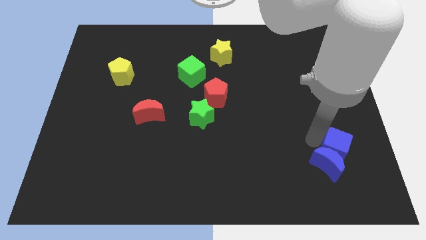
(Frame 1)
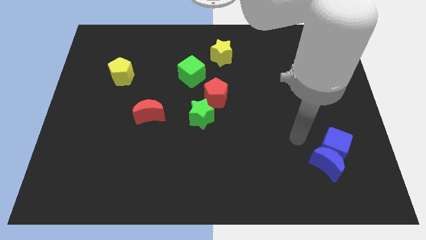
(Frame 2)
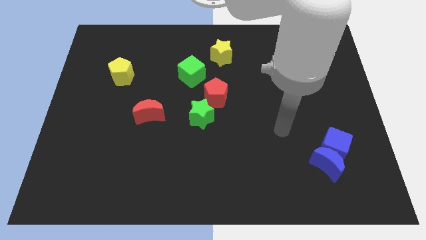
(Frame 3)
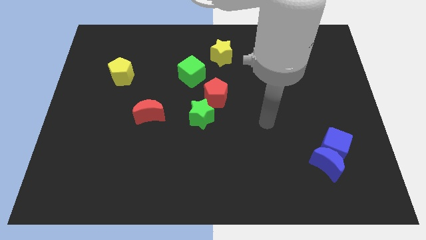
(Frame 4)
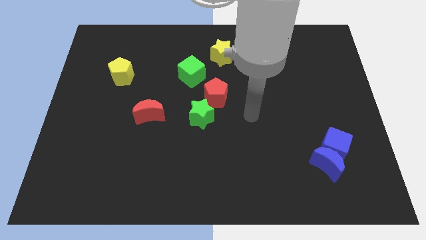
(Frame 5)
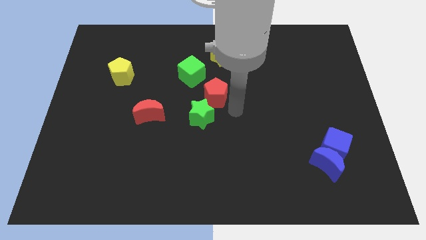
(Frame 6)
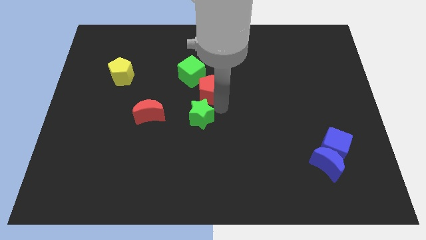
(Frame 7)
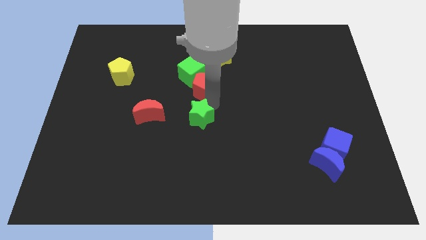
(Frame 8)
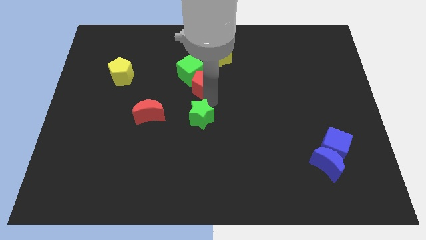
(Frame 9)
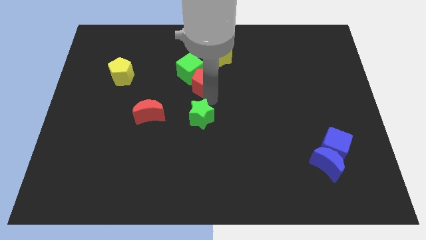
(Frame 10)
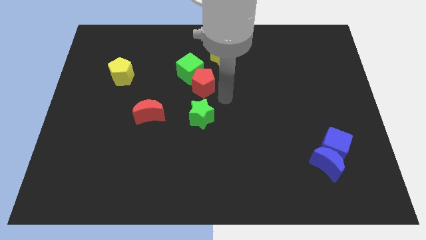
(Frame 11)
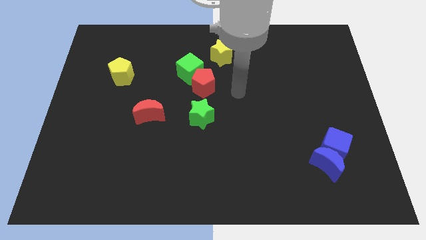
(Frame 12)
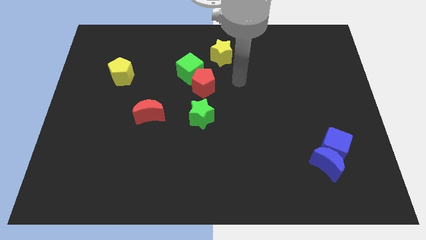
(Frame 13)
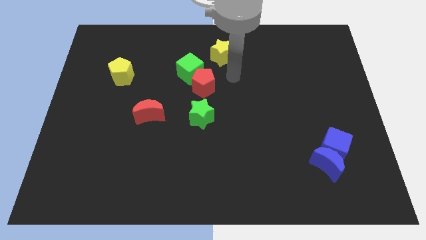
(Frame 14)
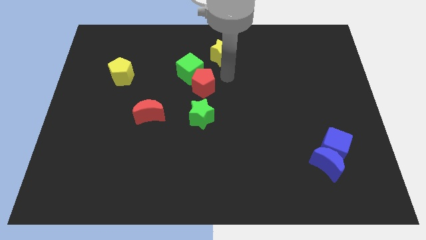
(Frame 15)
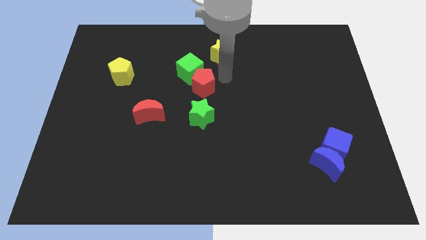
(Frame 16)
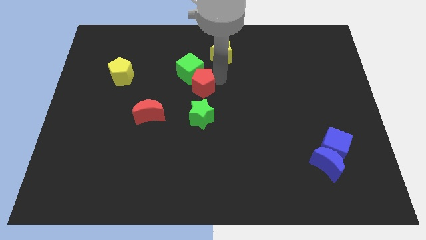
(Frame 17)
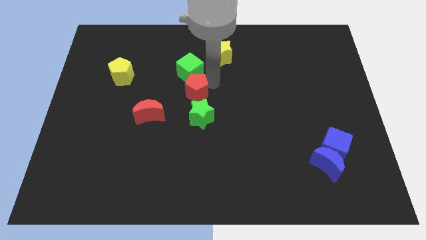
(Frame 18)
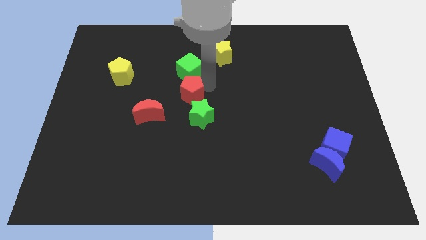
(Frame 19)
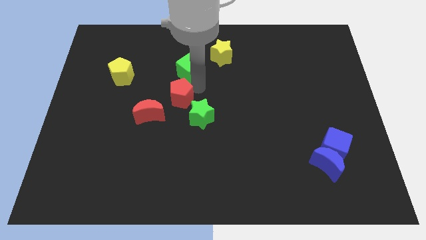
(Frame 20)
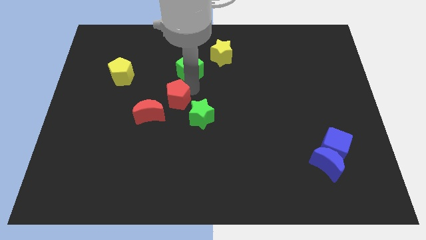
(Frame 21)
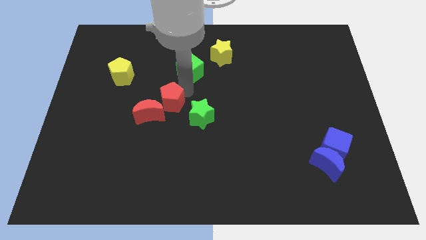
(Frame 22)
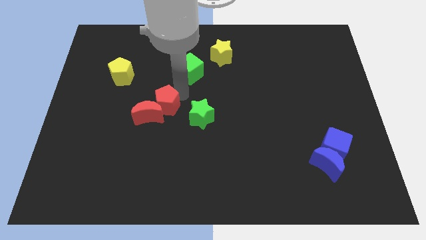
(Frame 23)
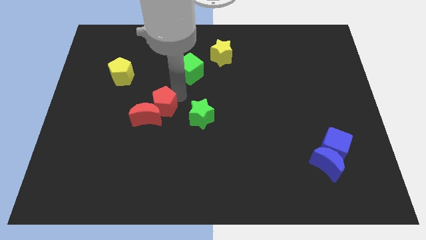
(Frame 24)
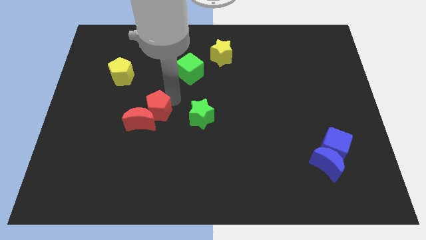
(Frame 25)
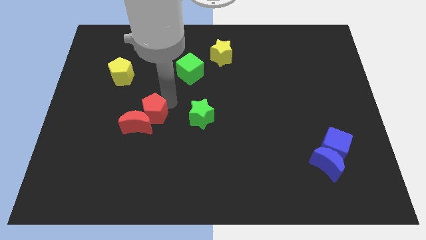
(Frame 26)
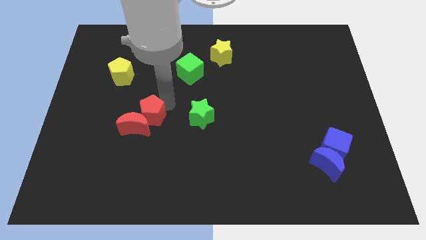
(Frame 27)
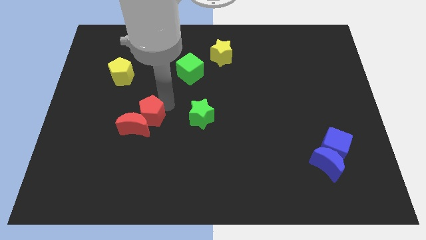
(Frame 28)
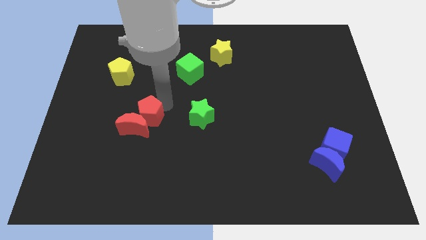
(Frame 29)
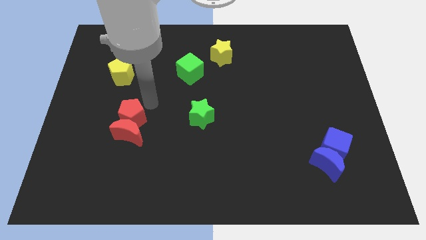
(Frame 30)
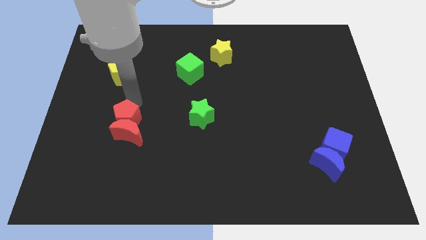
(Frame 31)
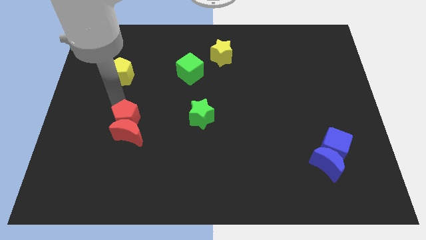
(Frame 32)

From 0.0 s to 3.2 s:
touch the green cube and red moon with red pentagon

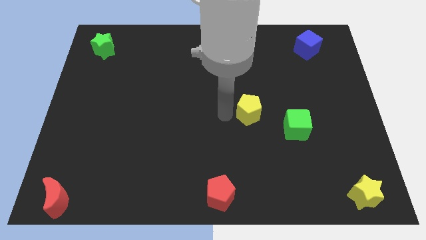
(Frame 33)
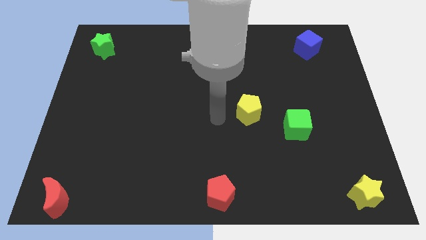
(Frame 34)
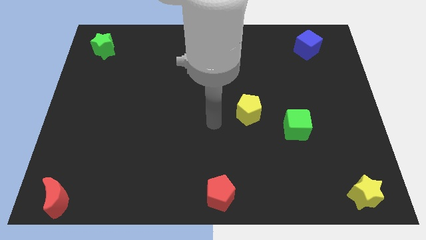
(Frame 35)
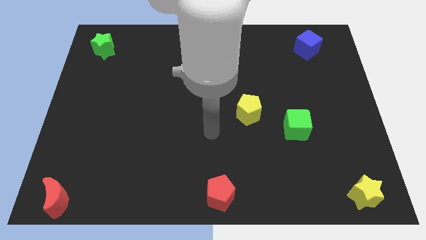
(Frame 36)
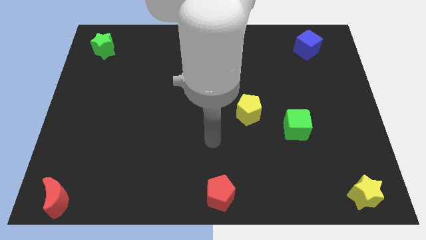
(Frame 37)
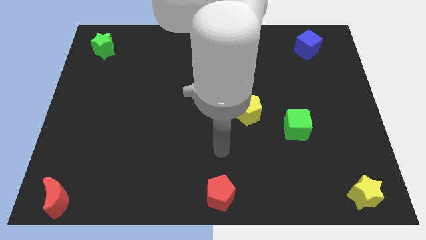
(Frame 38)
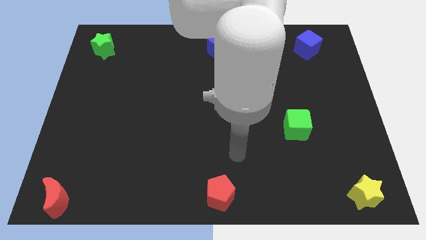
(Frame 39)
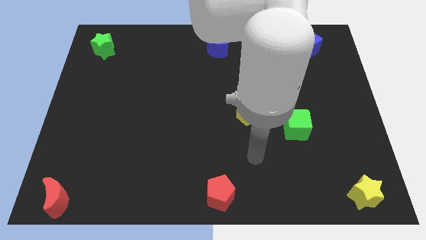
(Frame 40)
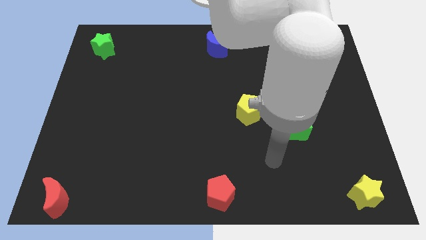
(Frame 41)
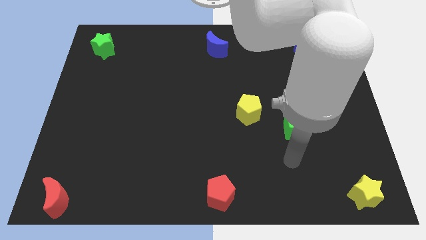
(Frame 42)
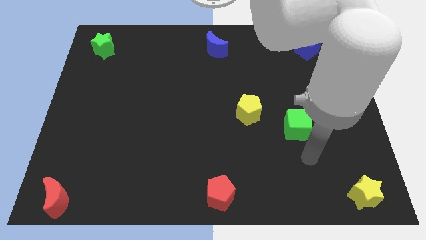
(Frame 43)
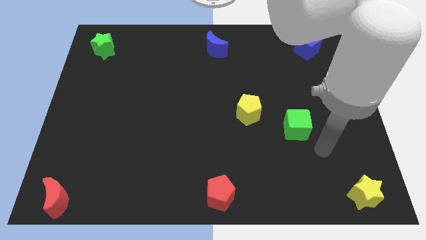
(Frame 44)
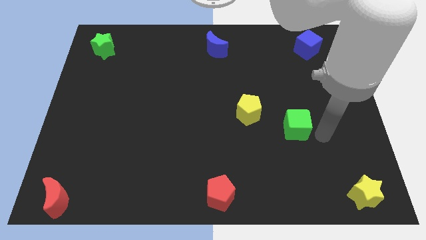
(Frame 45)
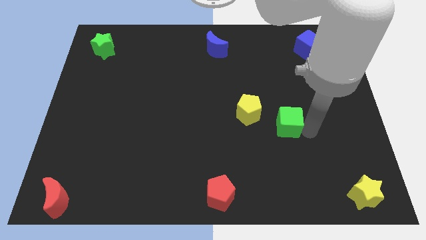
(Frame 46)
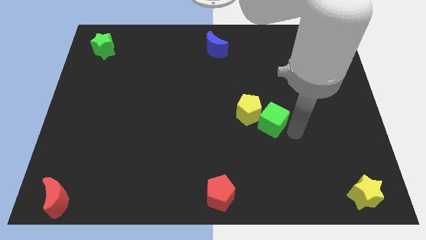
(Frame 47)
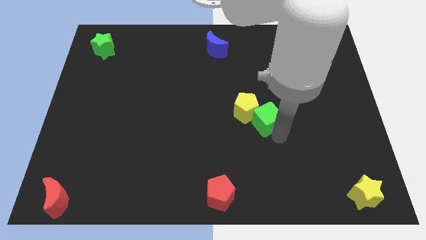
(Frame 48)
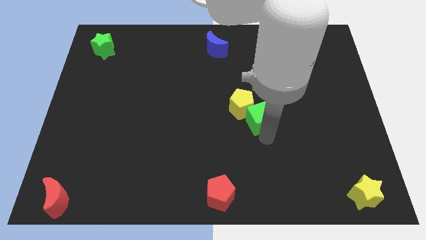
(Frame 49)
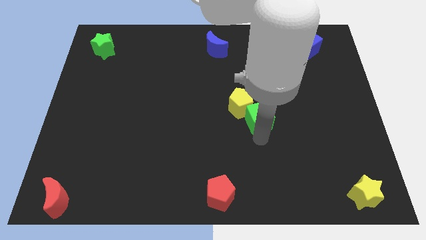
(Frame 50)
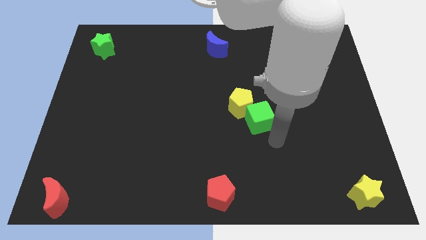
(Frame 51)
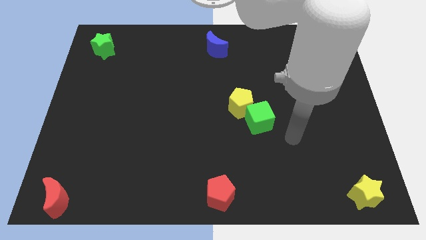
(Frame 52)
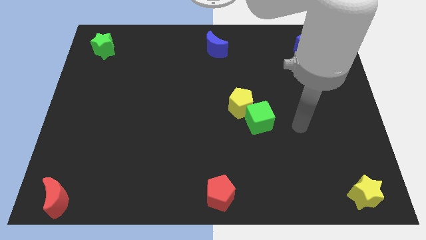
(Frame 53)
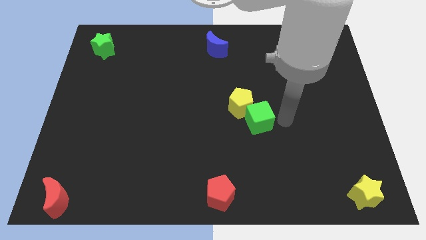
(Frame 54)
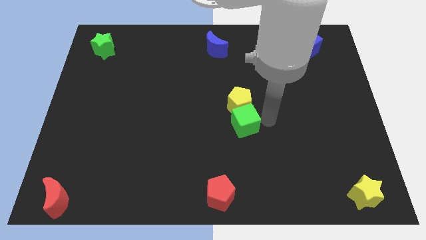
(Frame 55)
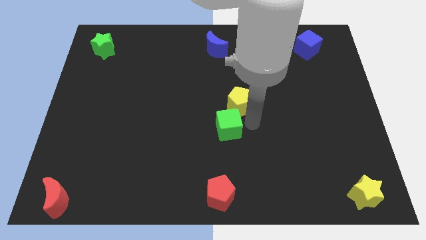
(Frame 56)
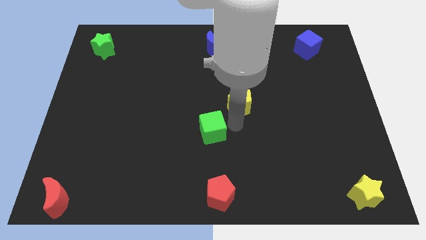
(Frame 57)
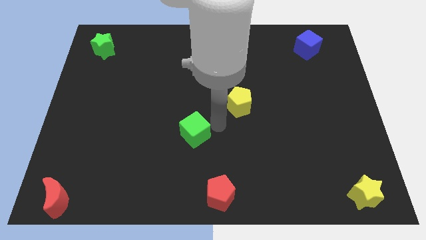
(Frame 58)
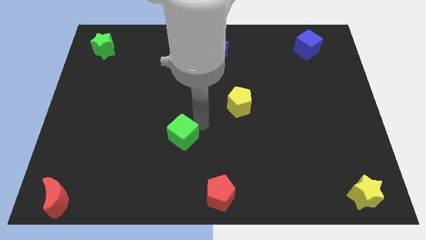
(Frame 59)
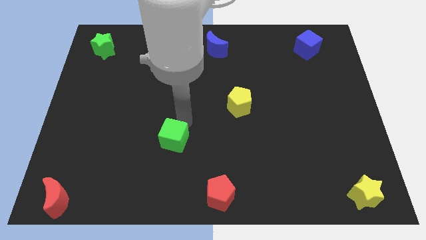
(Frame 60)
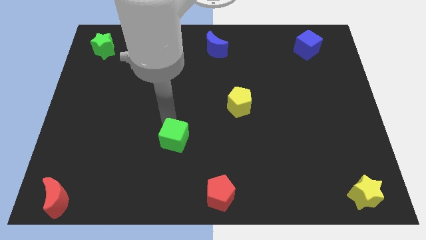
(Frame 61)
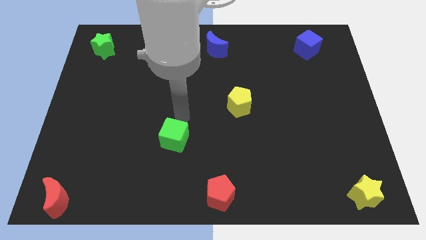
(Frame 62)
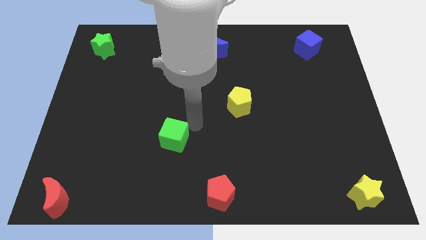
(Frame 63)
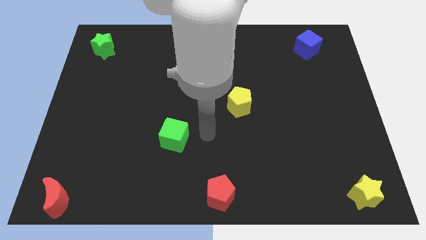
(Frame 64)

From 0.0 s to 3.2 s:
place the green cube left to the yellow pentagon

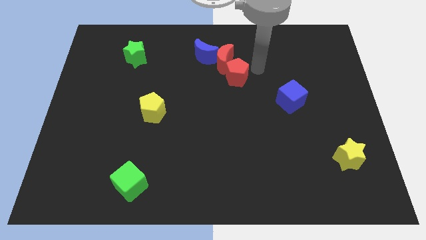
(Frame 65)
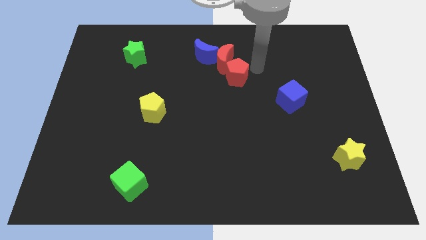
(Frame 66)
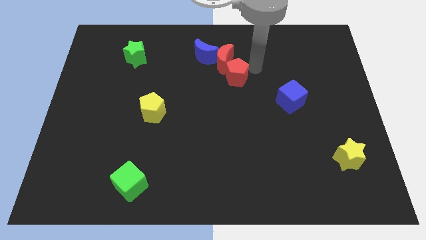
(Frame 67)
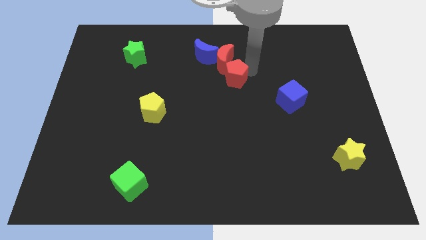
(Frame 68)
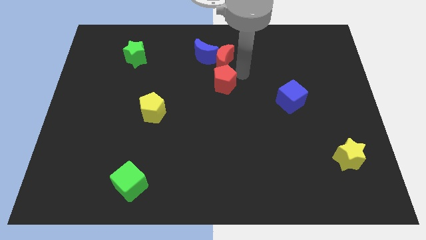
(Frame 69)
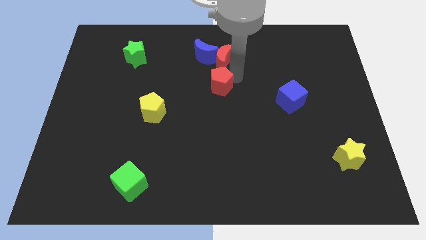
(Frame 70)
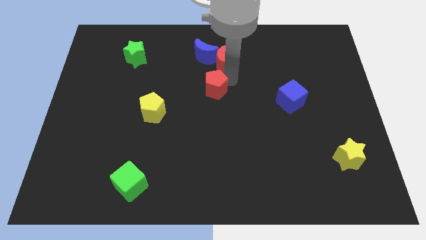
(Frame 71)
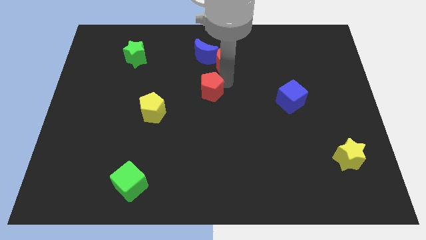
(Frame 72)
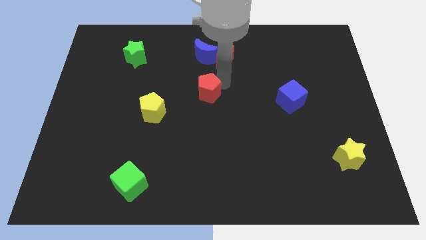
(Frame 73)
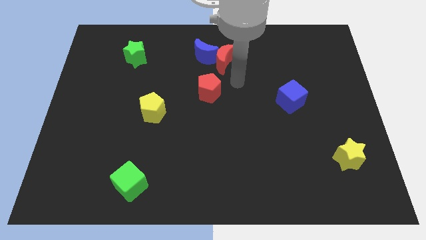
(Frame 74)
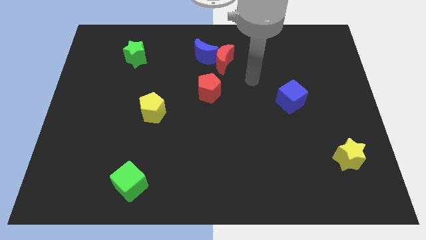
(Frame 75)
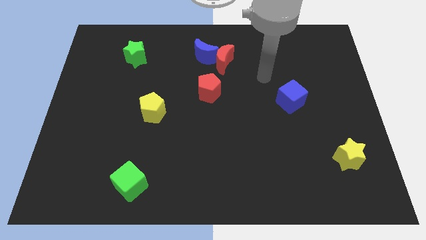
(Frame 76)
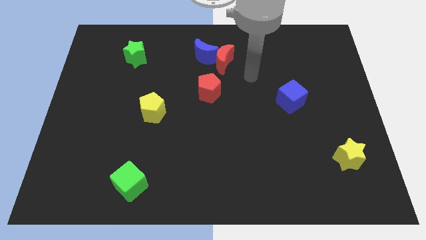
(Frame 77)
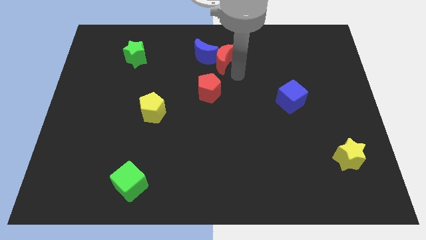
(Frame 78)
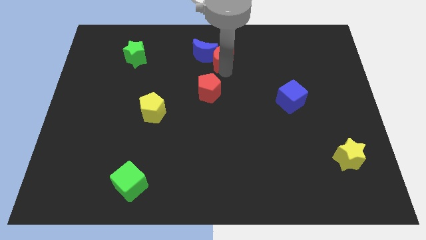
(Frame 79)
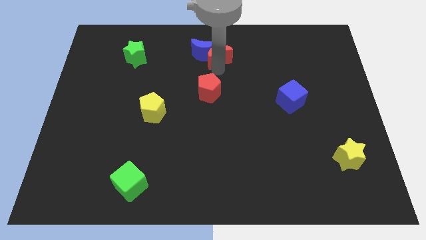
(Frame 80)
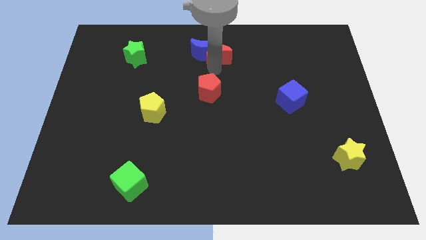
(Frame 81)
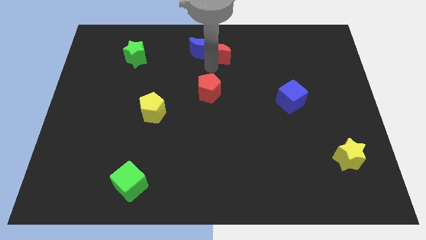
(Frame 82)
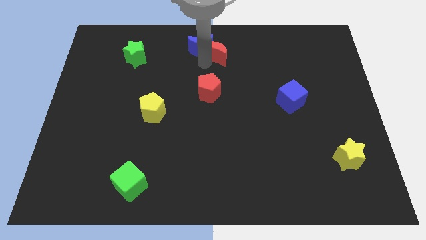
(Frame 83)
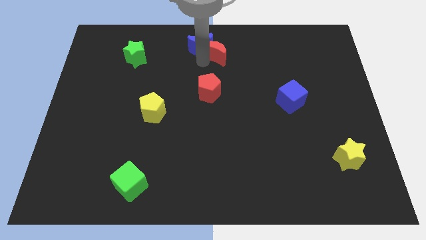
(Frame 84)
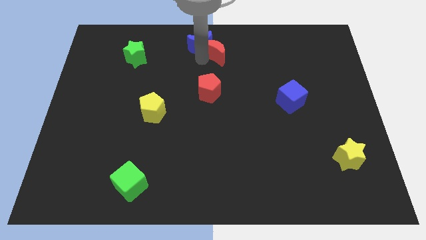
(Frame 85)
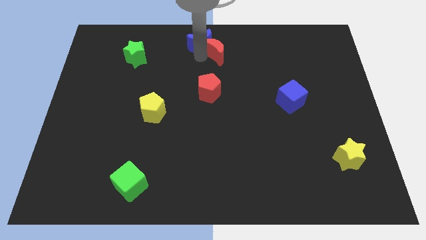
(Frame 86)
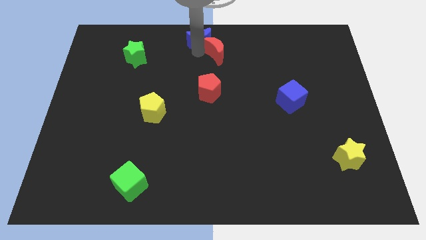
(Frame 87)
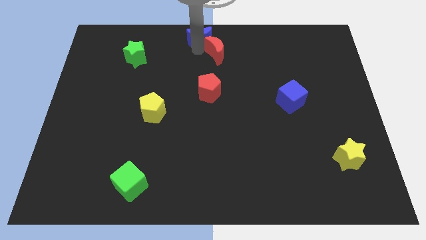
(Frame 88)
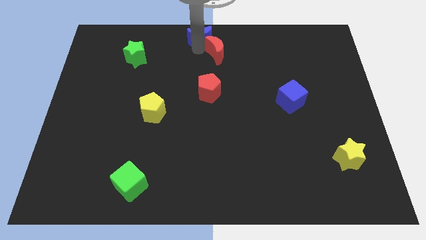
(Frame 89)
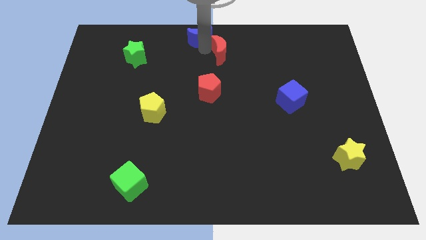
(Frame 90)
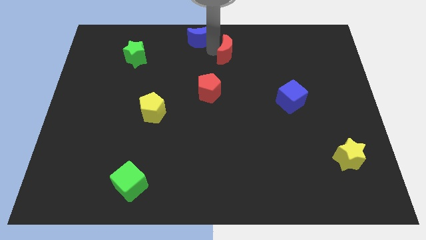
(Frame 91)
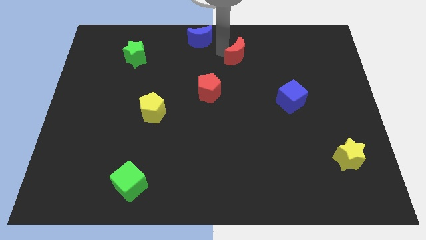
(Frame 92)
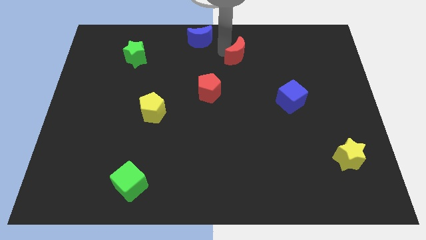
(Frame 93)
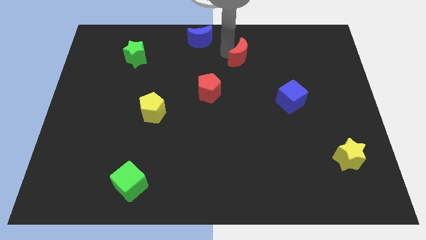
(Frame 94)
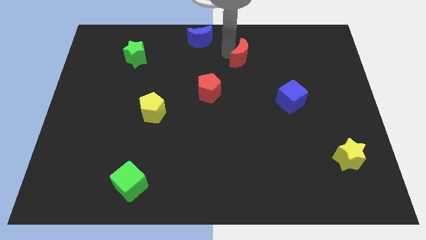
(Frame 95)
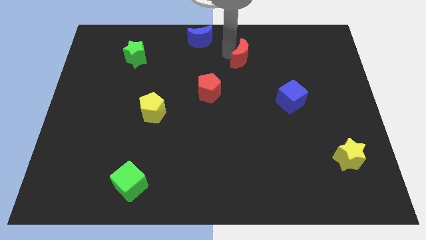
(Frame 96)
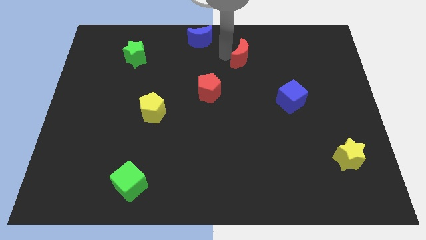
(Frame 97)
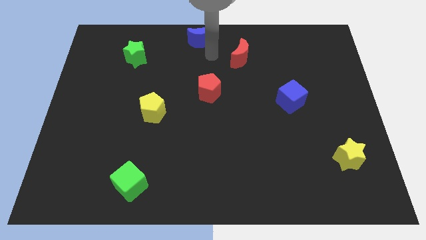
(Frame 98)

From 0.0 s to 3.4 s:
move the red crescent diagonally on the top right side of the red pentagon
